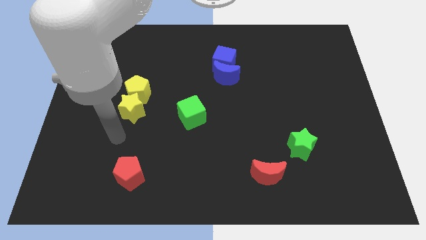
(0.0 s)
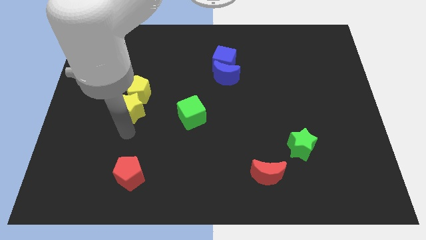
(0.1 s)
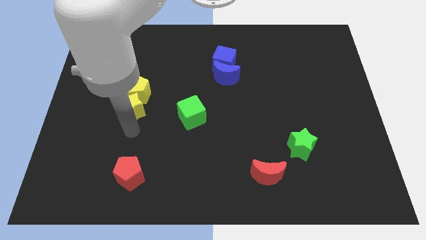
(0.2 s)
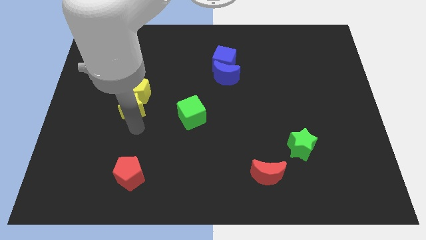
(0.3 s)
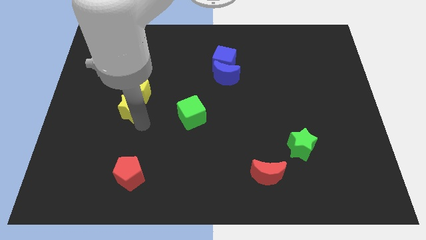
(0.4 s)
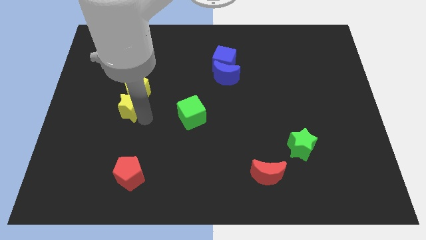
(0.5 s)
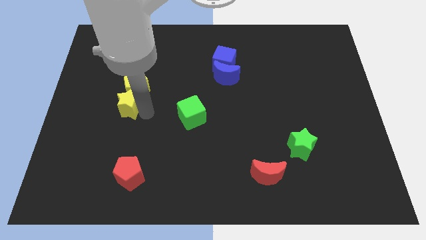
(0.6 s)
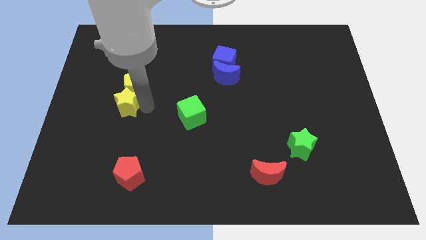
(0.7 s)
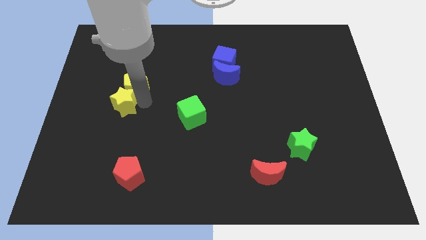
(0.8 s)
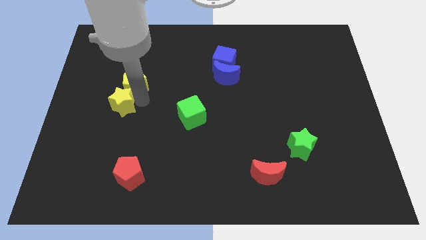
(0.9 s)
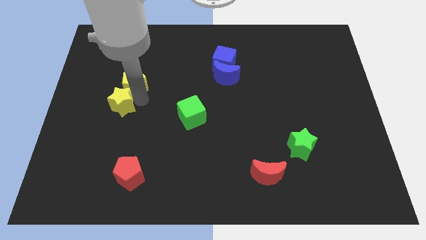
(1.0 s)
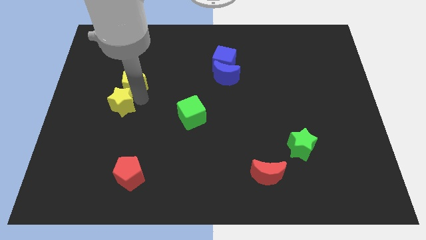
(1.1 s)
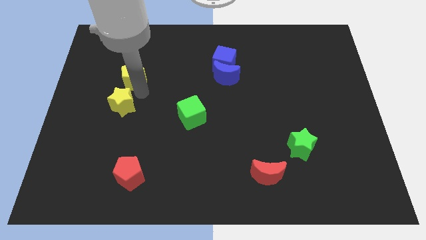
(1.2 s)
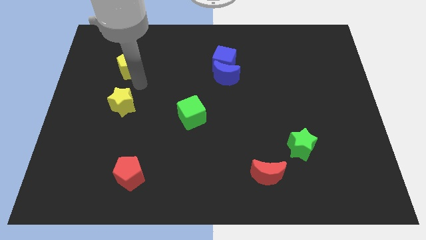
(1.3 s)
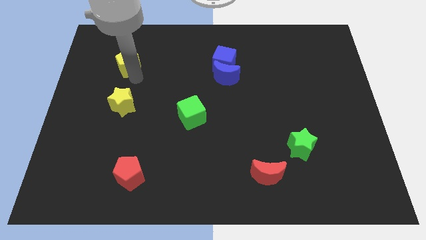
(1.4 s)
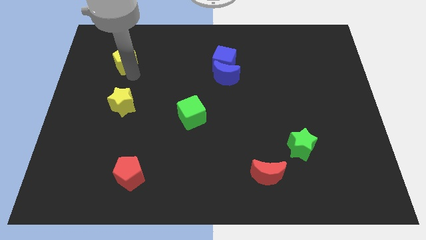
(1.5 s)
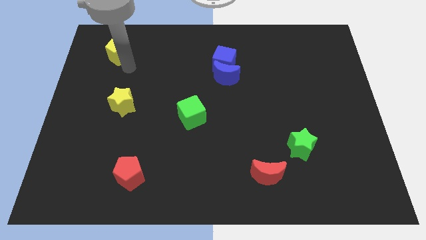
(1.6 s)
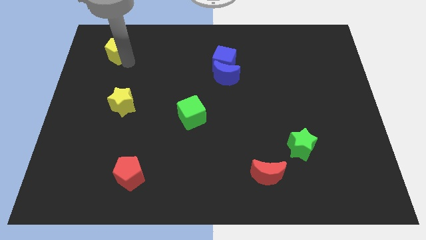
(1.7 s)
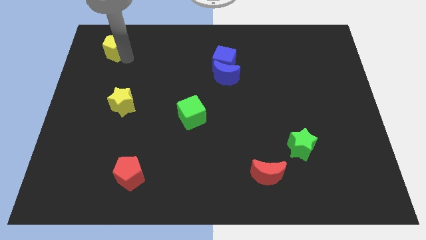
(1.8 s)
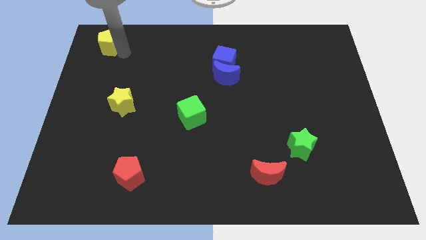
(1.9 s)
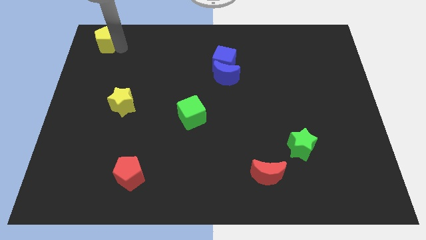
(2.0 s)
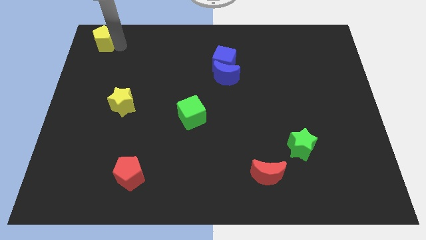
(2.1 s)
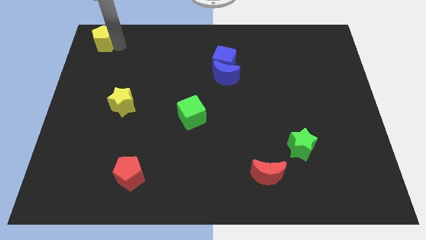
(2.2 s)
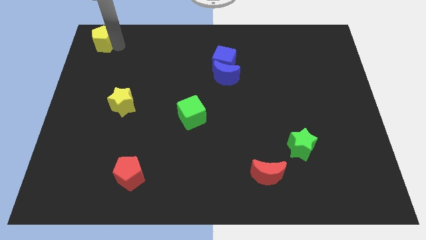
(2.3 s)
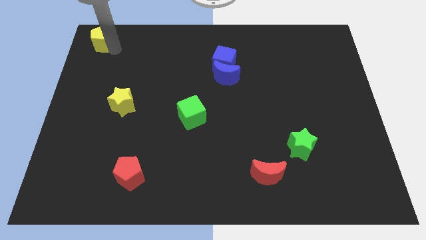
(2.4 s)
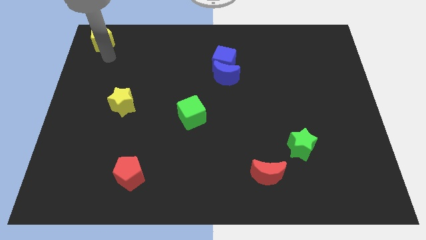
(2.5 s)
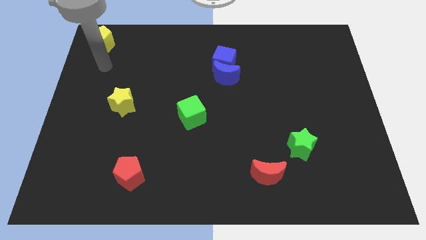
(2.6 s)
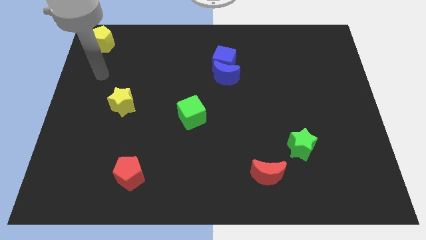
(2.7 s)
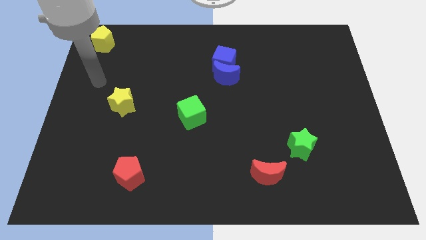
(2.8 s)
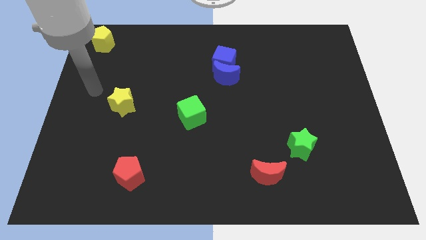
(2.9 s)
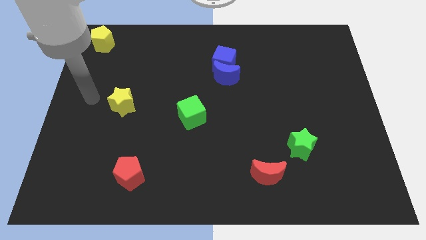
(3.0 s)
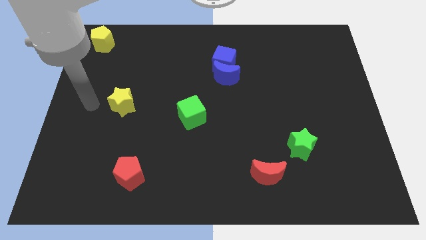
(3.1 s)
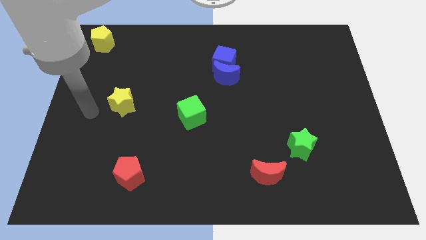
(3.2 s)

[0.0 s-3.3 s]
move the yellow pentagon to the top left corner of the board

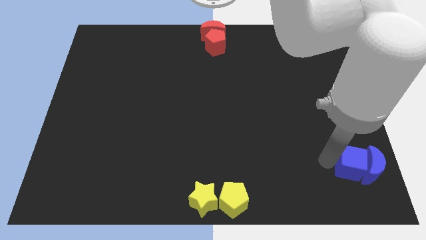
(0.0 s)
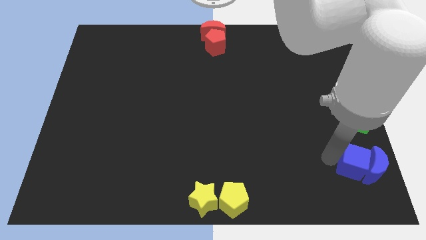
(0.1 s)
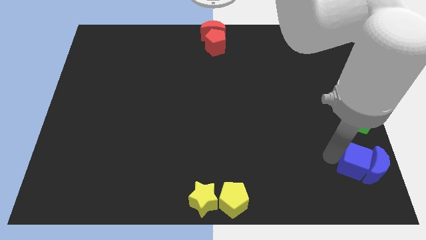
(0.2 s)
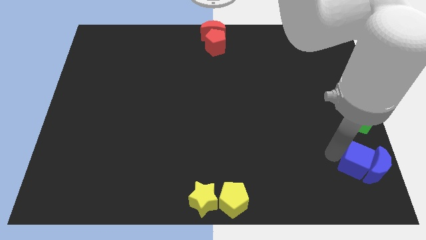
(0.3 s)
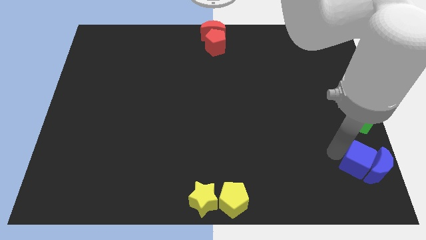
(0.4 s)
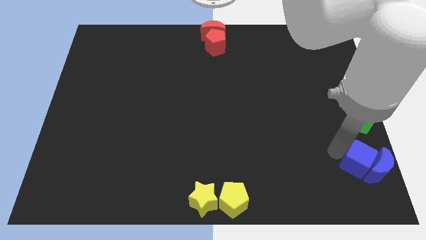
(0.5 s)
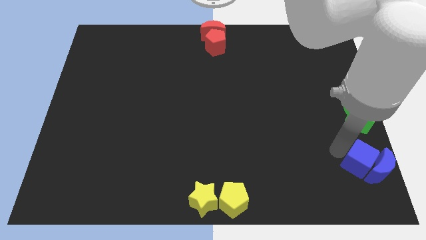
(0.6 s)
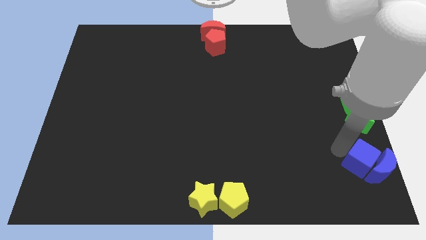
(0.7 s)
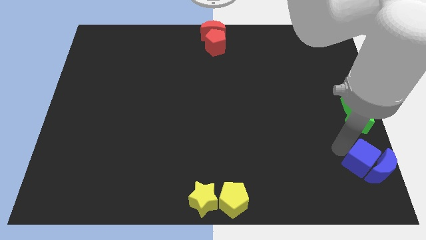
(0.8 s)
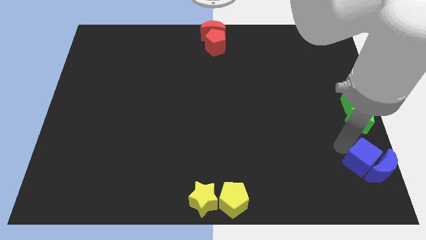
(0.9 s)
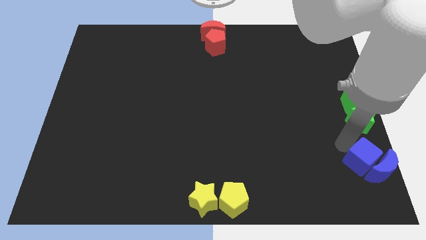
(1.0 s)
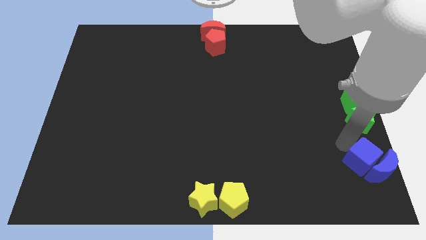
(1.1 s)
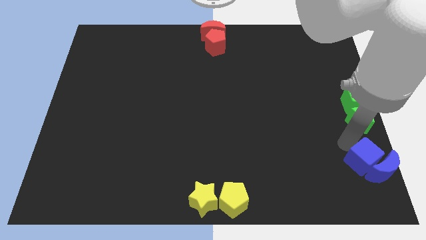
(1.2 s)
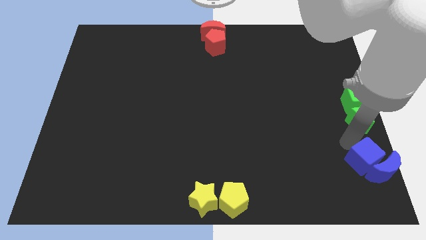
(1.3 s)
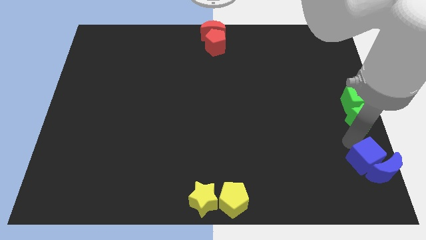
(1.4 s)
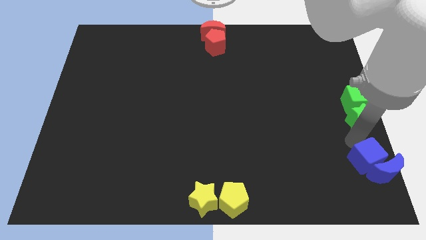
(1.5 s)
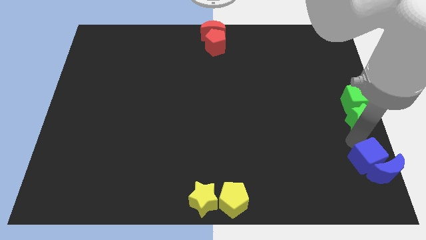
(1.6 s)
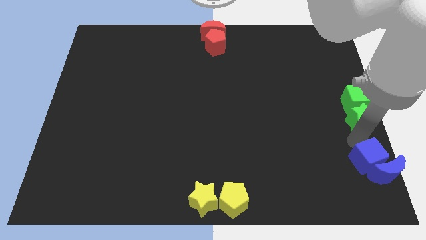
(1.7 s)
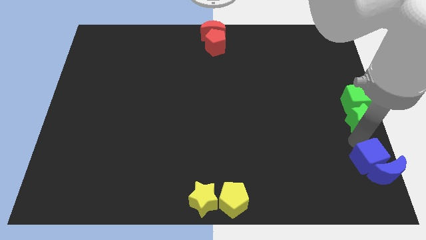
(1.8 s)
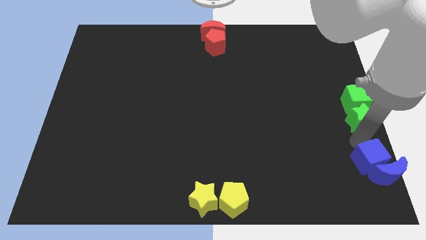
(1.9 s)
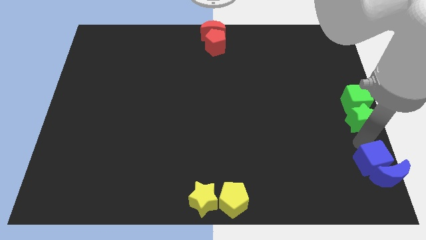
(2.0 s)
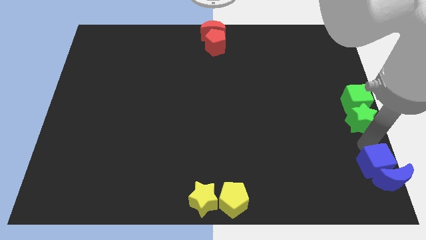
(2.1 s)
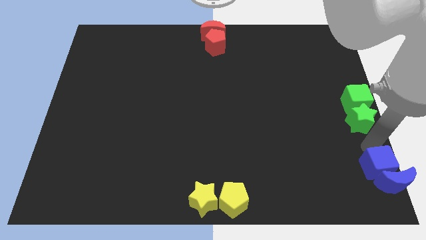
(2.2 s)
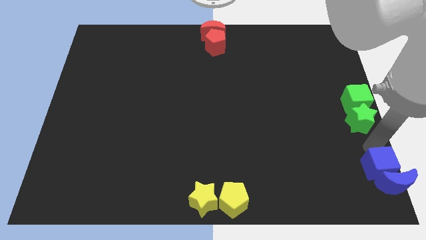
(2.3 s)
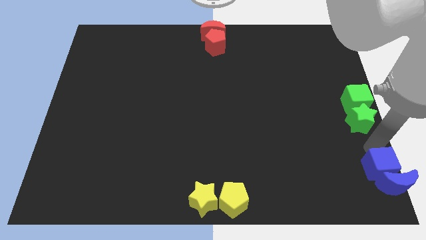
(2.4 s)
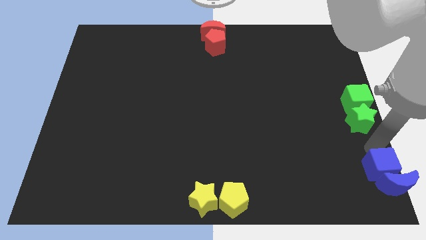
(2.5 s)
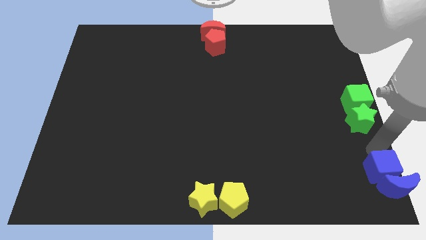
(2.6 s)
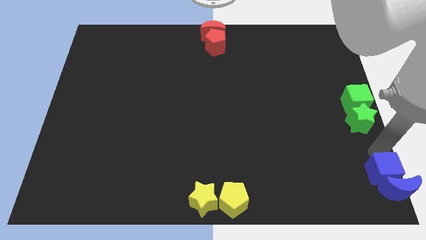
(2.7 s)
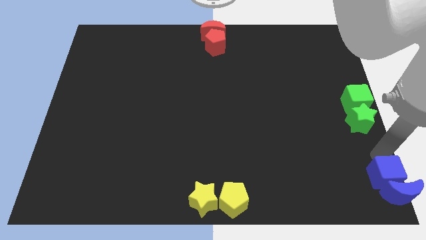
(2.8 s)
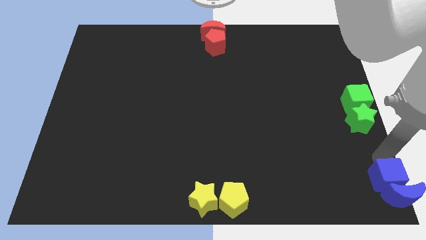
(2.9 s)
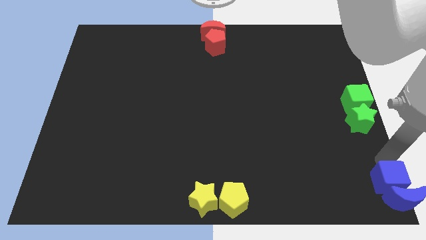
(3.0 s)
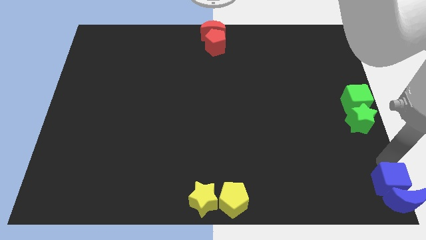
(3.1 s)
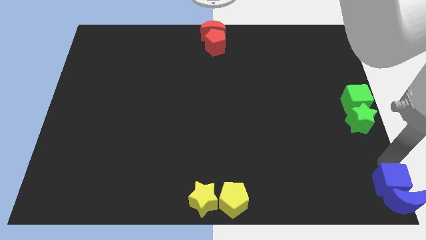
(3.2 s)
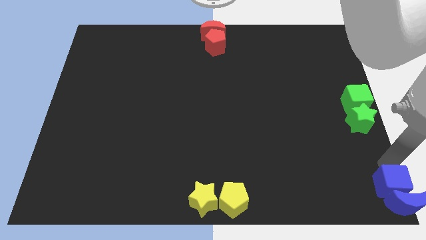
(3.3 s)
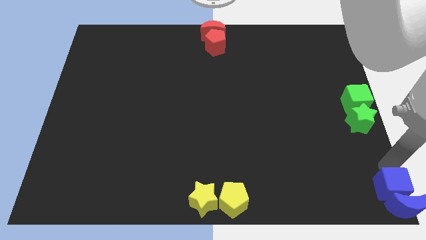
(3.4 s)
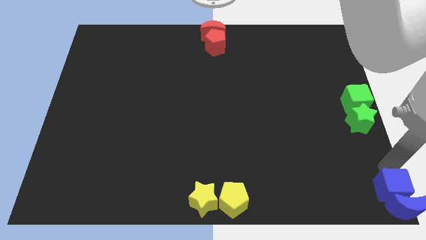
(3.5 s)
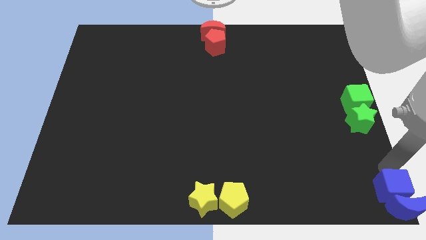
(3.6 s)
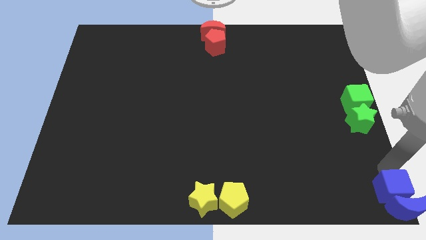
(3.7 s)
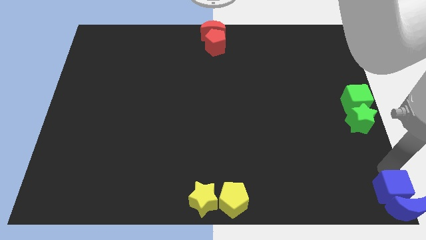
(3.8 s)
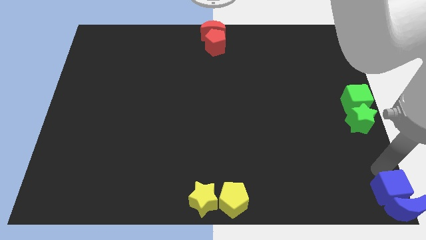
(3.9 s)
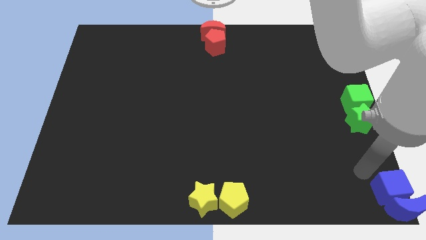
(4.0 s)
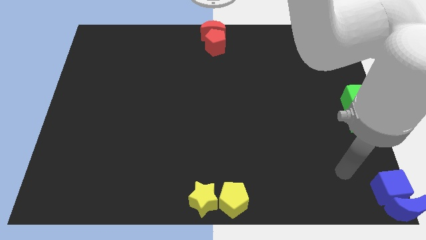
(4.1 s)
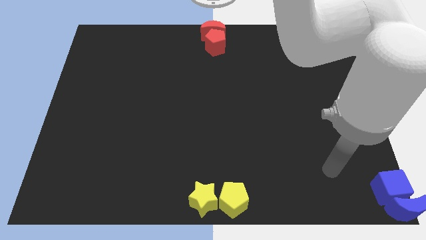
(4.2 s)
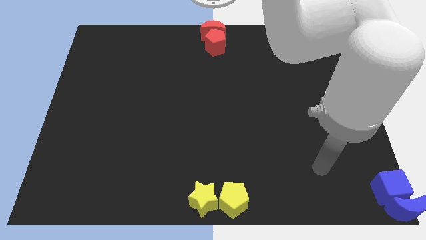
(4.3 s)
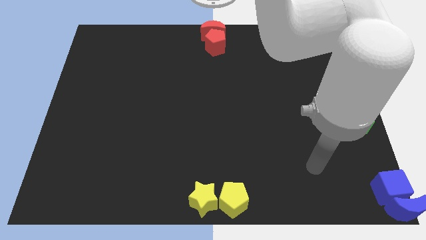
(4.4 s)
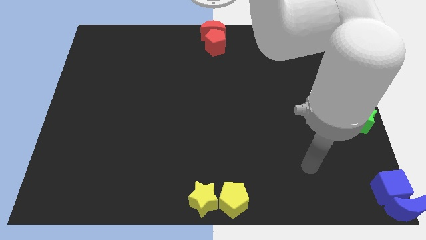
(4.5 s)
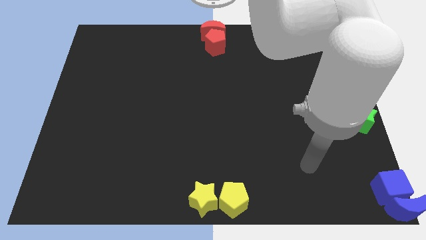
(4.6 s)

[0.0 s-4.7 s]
place the blue blocks at the bottom right corner of the board

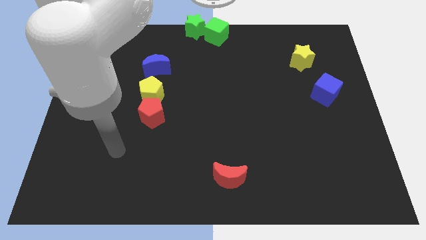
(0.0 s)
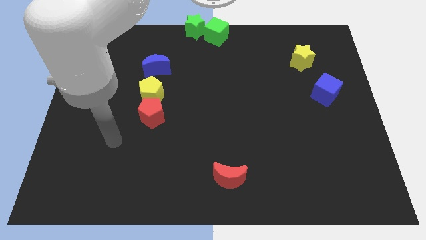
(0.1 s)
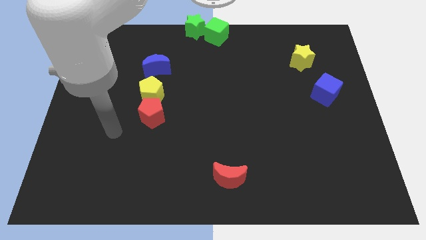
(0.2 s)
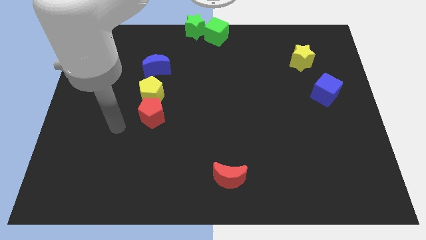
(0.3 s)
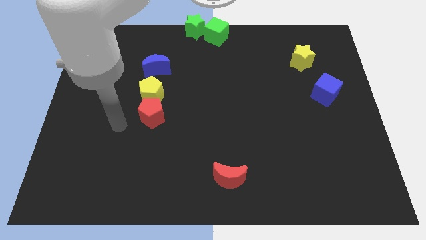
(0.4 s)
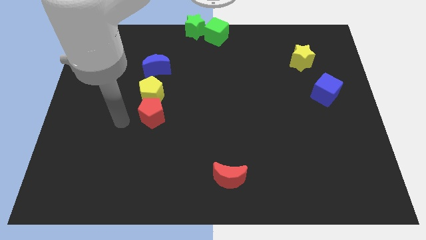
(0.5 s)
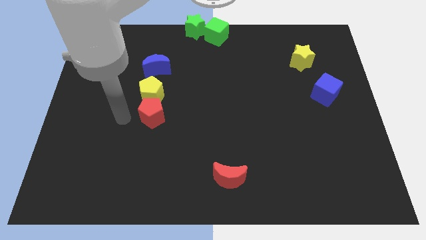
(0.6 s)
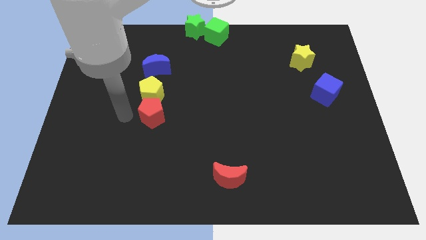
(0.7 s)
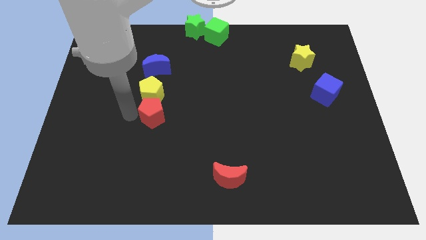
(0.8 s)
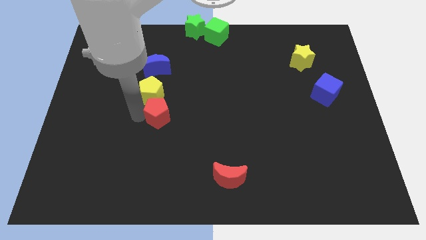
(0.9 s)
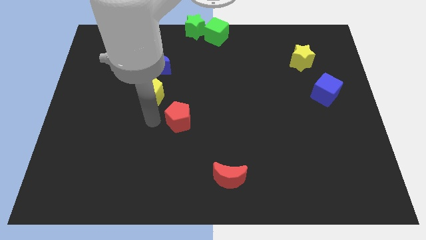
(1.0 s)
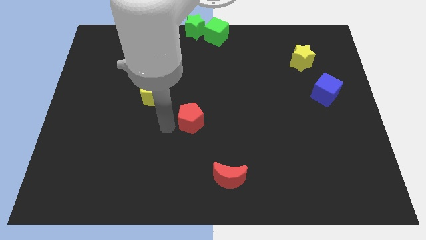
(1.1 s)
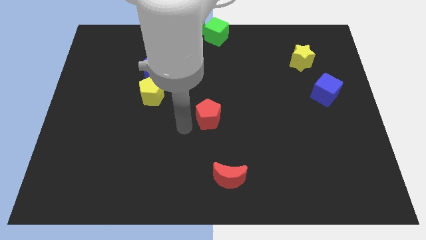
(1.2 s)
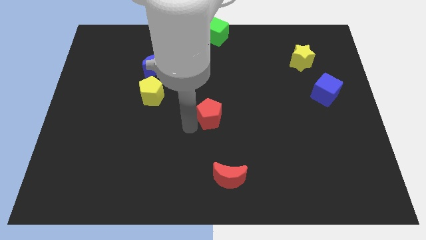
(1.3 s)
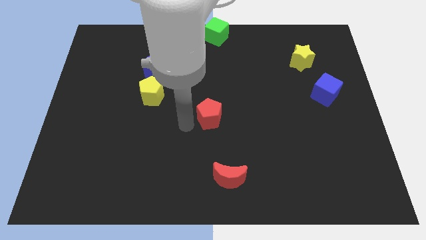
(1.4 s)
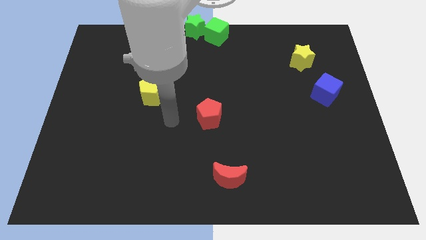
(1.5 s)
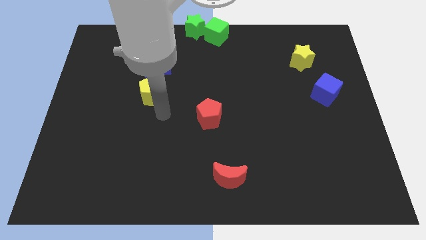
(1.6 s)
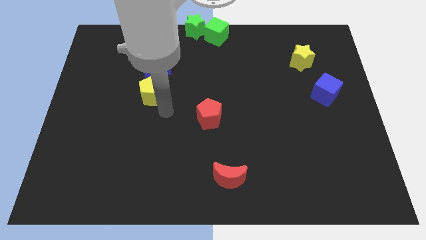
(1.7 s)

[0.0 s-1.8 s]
move the red pentagon towards the right side
